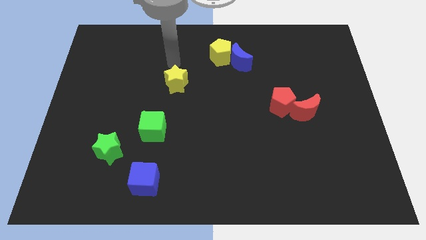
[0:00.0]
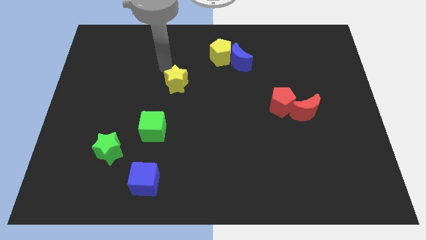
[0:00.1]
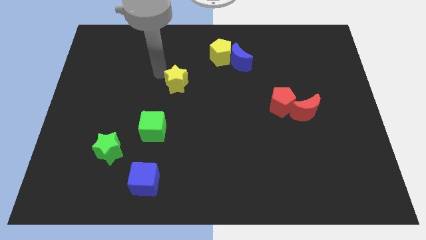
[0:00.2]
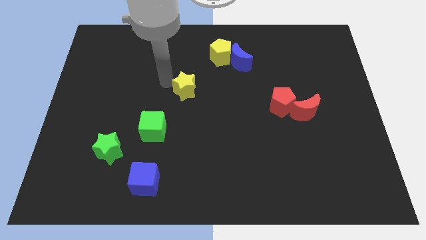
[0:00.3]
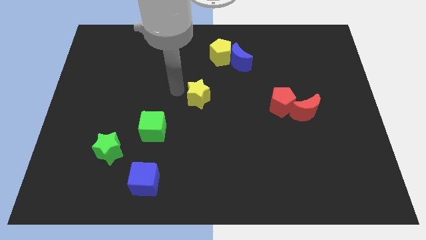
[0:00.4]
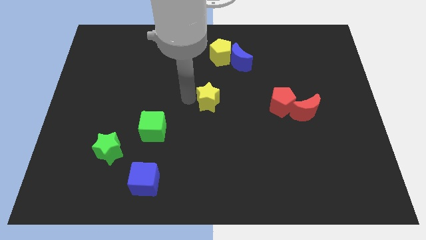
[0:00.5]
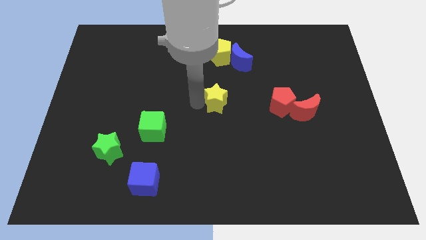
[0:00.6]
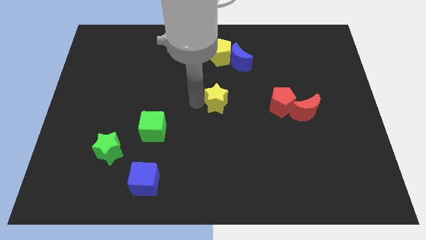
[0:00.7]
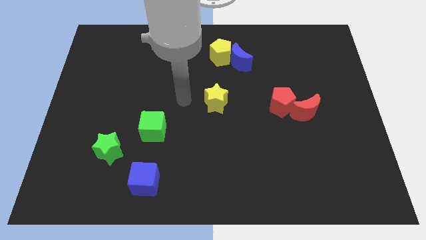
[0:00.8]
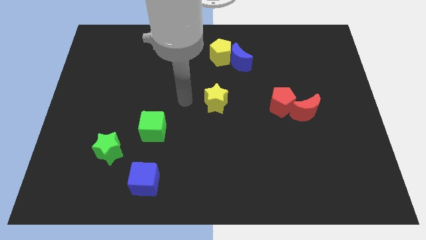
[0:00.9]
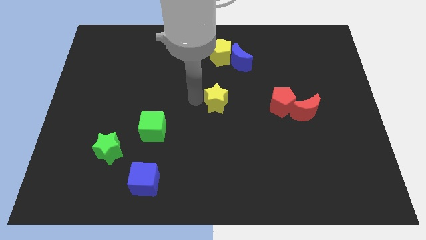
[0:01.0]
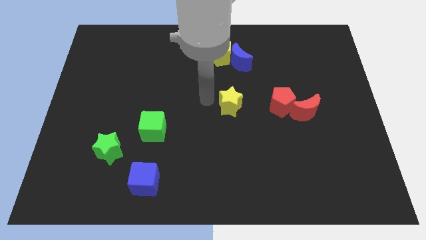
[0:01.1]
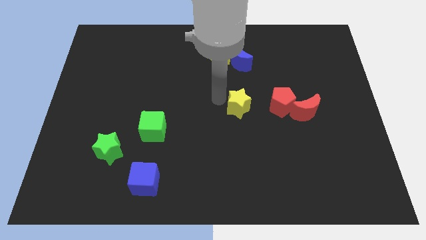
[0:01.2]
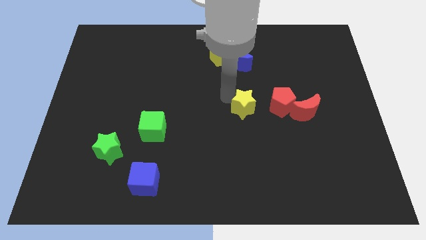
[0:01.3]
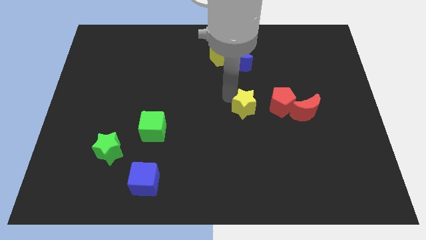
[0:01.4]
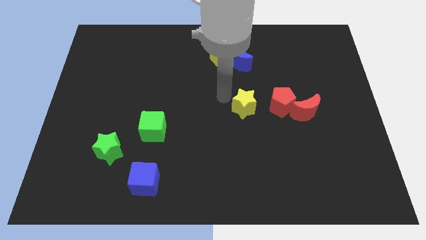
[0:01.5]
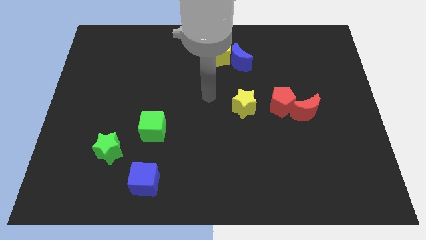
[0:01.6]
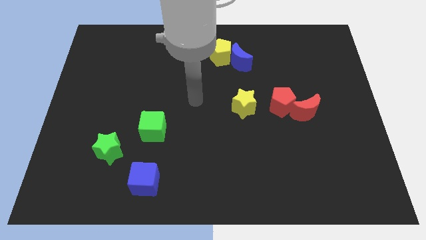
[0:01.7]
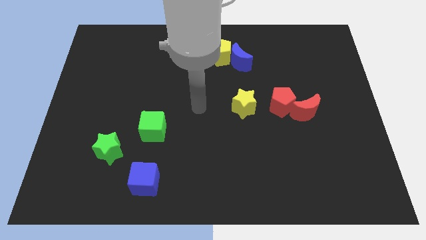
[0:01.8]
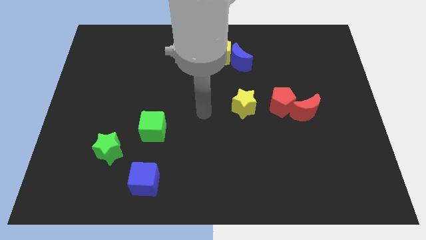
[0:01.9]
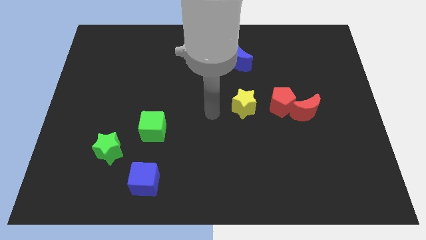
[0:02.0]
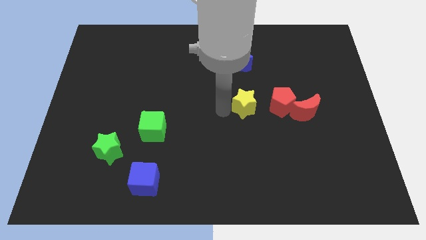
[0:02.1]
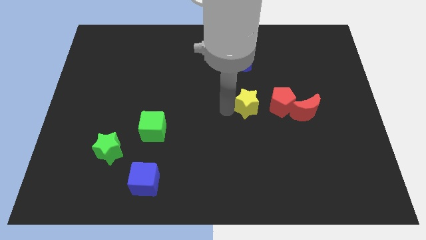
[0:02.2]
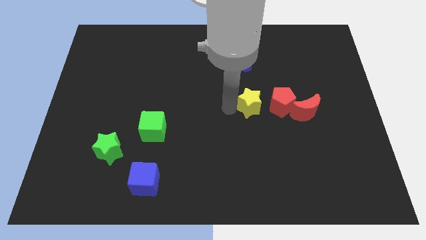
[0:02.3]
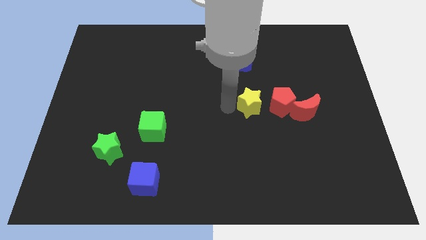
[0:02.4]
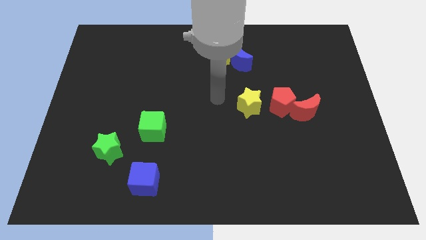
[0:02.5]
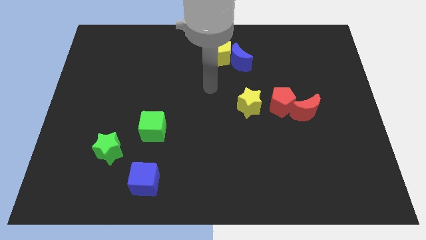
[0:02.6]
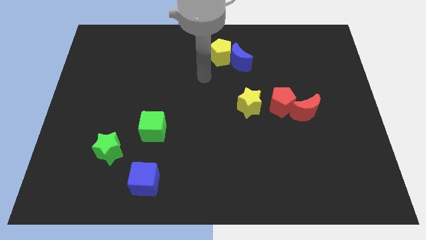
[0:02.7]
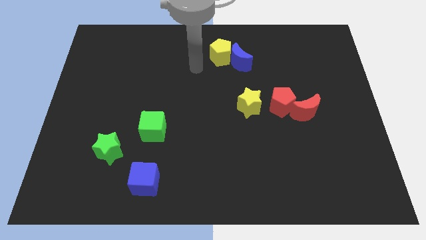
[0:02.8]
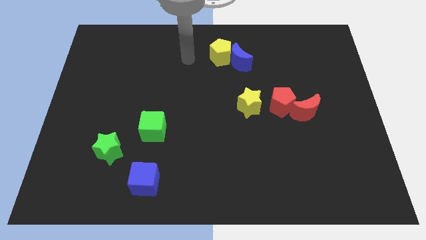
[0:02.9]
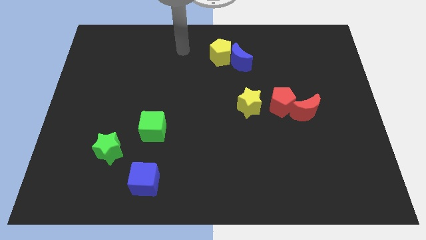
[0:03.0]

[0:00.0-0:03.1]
place yellow star towards the left side of the red pentagon

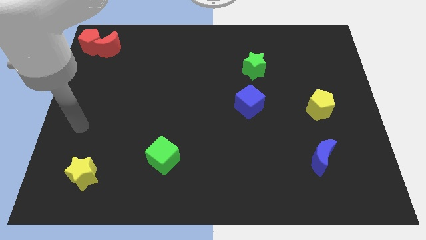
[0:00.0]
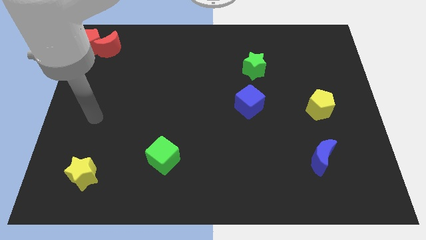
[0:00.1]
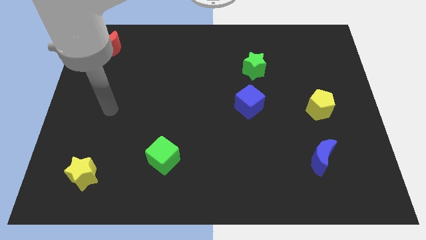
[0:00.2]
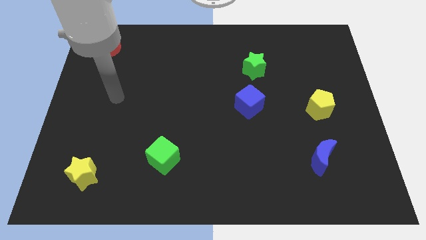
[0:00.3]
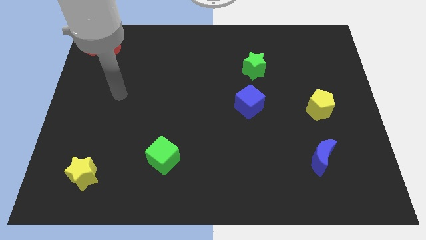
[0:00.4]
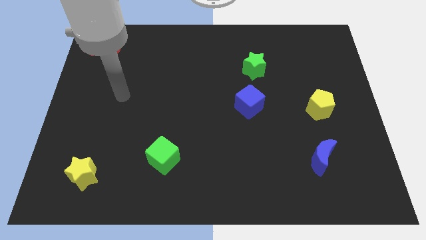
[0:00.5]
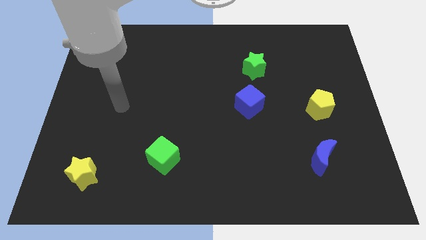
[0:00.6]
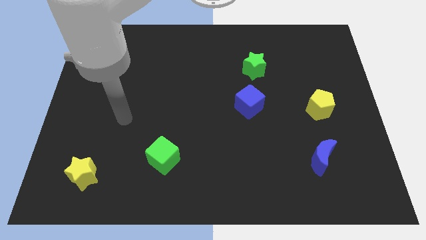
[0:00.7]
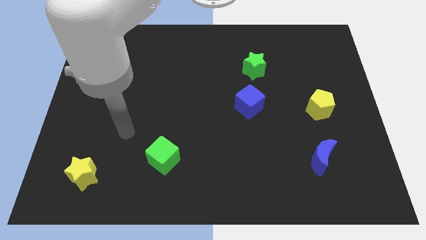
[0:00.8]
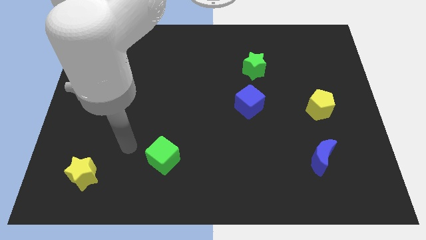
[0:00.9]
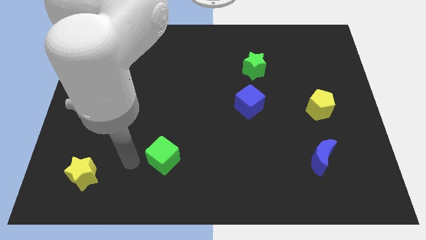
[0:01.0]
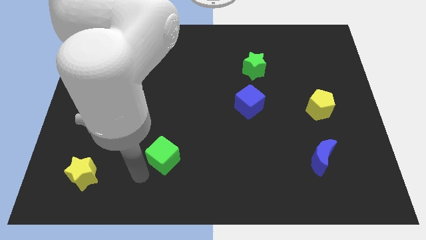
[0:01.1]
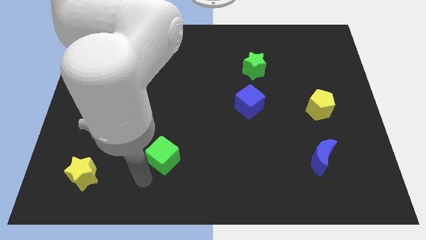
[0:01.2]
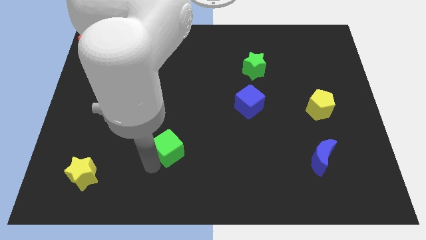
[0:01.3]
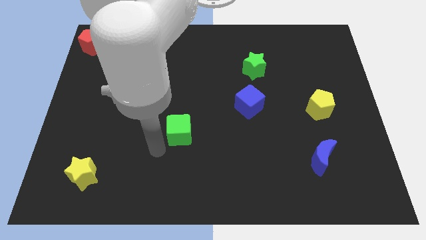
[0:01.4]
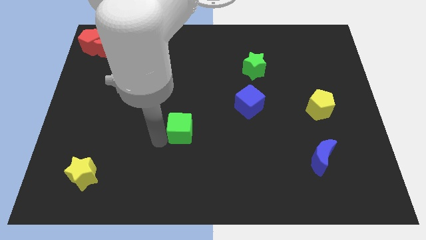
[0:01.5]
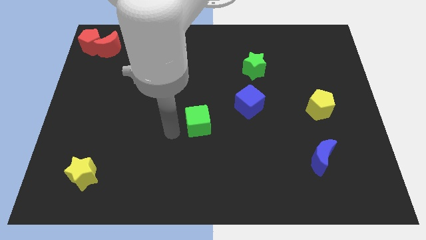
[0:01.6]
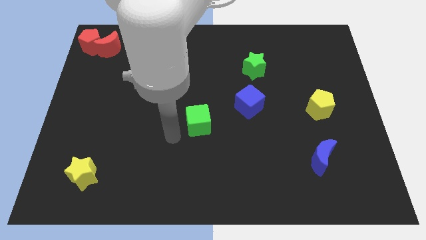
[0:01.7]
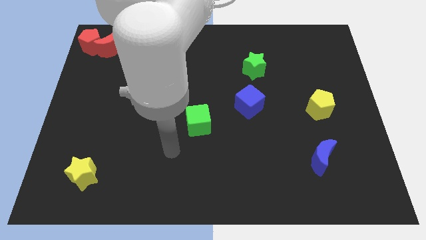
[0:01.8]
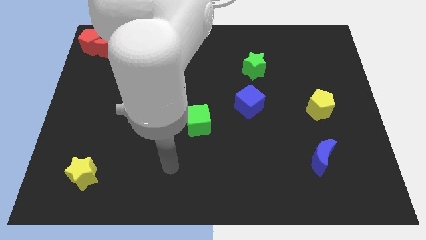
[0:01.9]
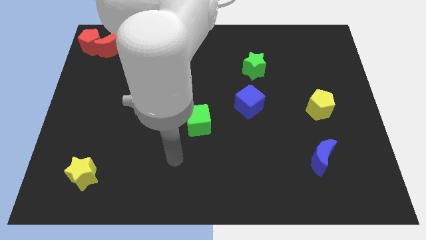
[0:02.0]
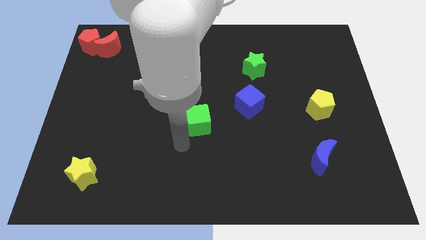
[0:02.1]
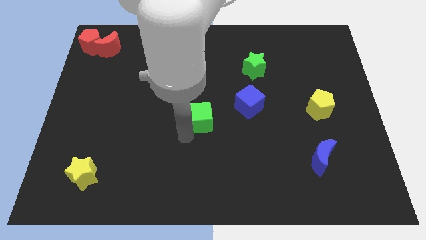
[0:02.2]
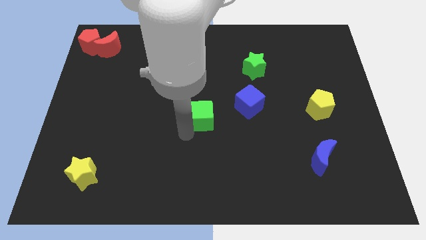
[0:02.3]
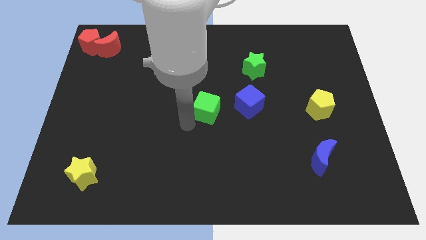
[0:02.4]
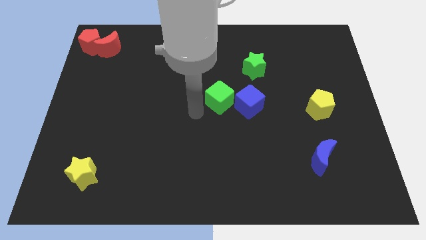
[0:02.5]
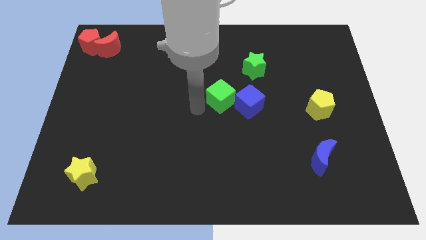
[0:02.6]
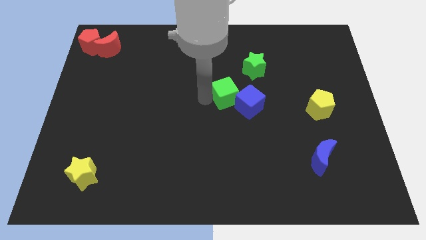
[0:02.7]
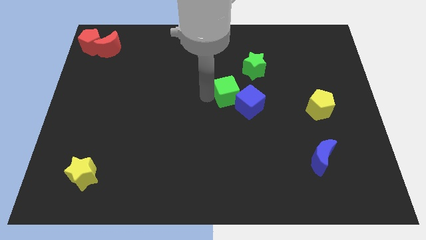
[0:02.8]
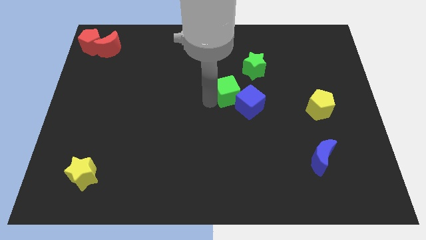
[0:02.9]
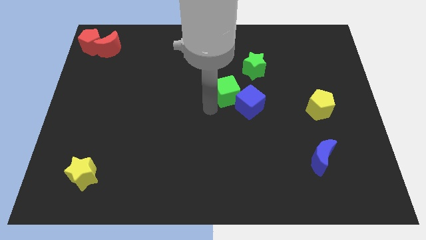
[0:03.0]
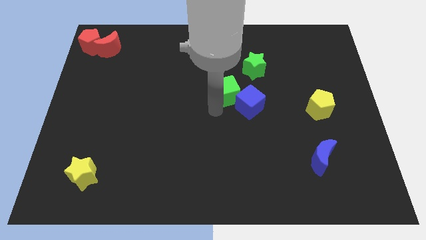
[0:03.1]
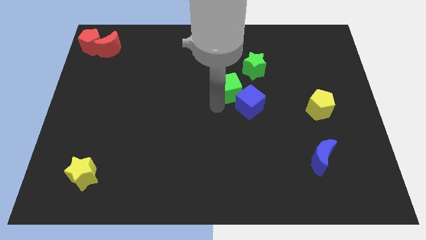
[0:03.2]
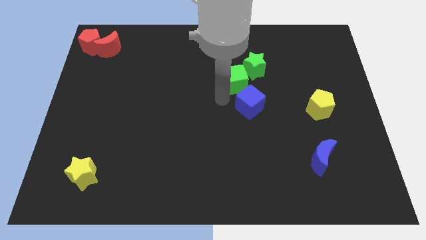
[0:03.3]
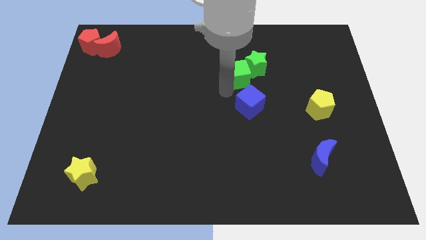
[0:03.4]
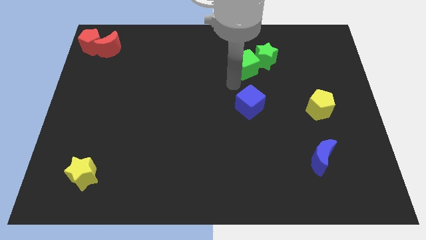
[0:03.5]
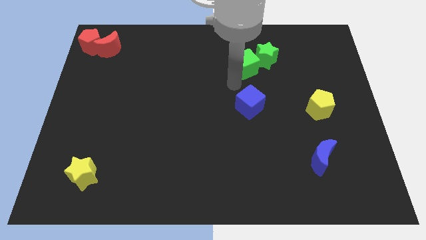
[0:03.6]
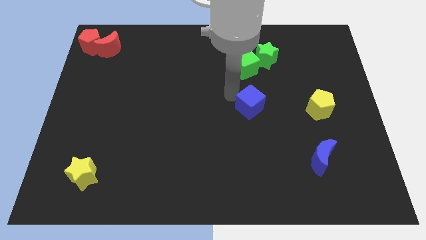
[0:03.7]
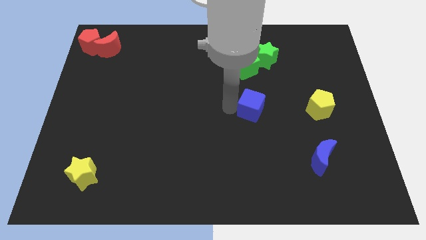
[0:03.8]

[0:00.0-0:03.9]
push the green cube into the green star

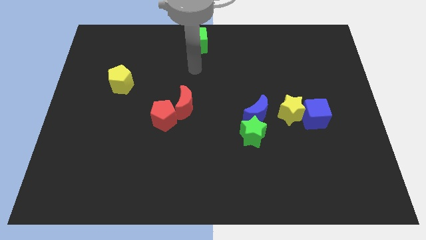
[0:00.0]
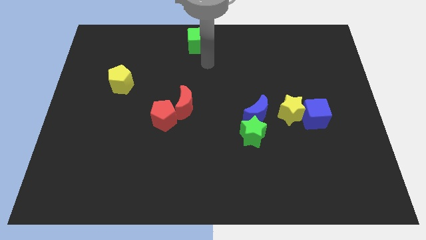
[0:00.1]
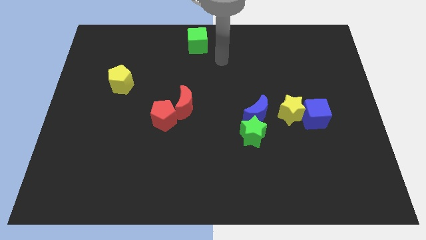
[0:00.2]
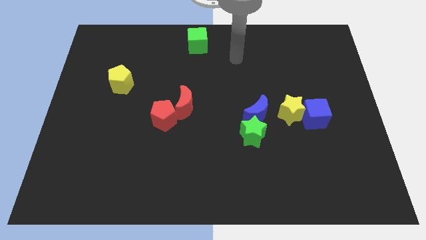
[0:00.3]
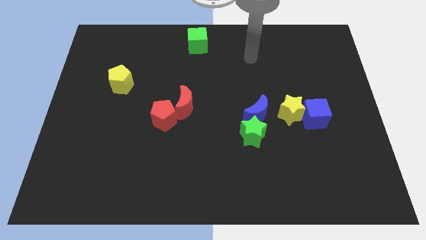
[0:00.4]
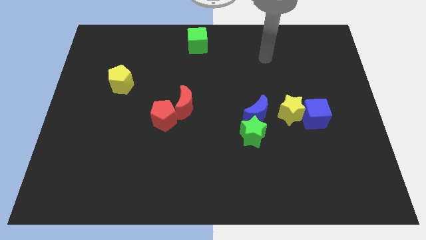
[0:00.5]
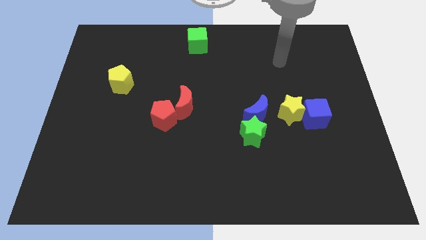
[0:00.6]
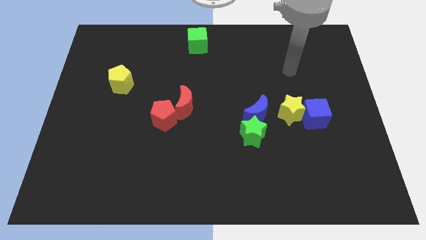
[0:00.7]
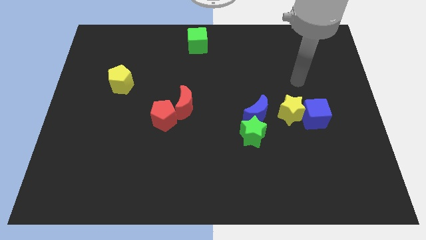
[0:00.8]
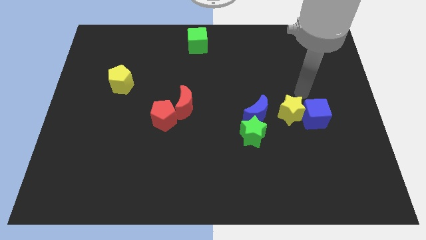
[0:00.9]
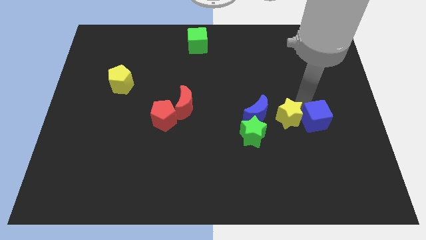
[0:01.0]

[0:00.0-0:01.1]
tap the yellow star

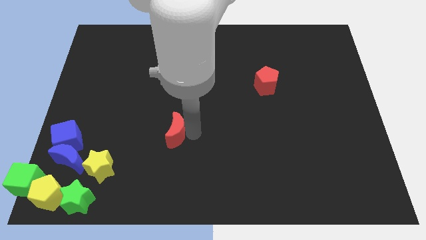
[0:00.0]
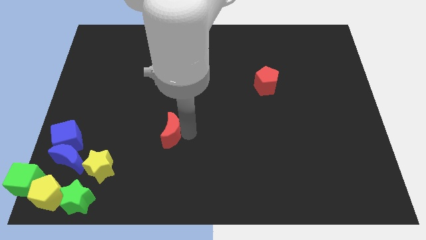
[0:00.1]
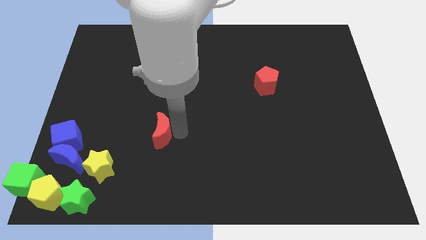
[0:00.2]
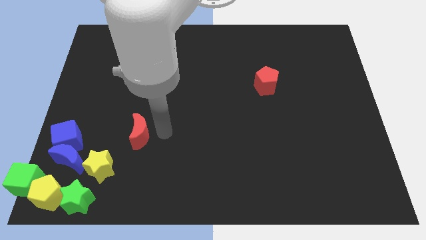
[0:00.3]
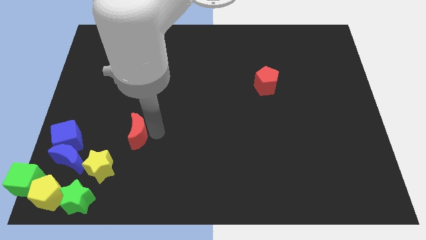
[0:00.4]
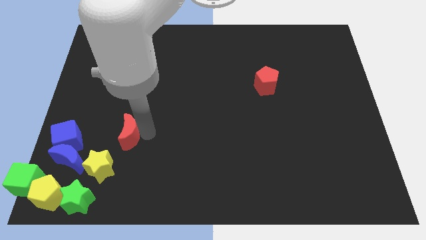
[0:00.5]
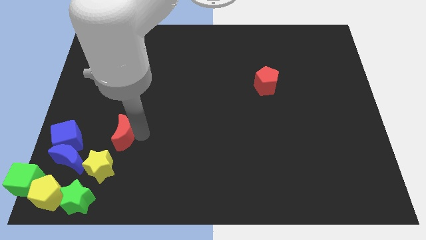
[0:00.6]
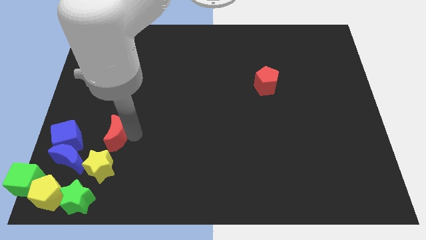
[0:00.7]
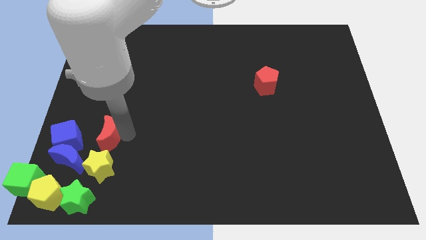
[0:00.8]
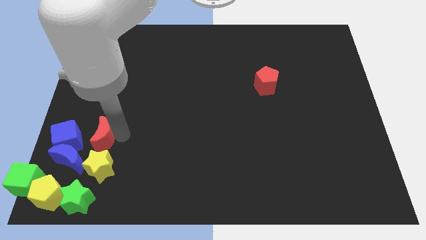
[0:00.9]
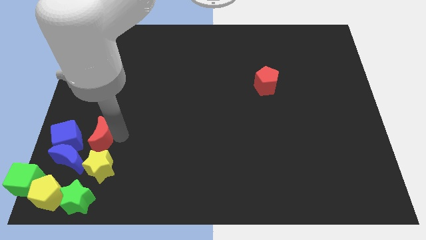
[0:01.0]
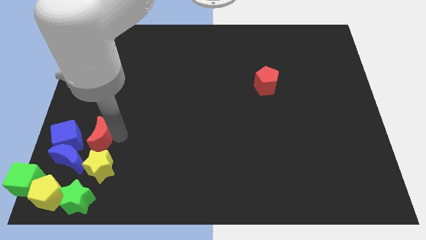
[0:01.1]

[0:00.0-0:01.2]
place the red moon above the yellow star
